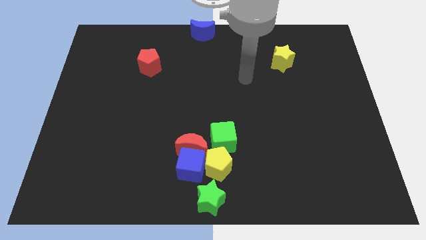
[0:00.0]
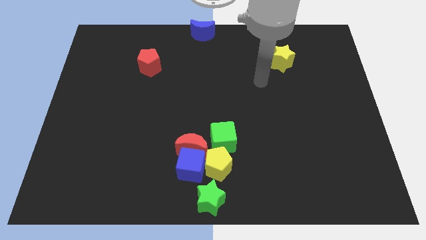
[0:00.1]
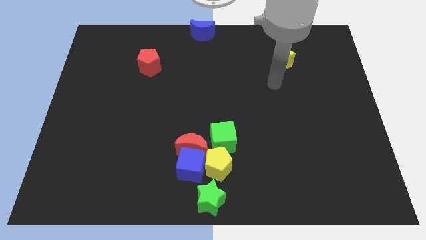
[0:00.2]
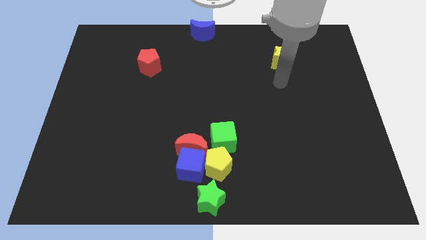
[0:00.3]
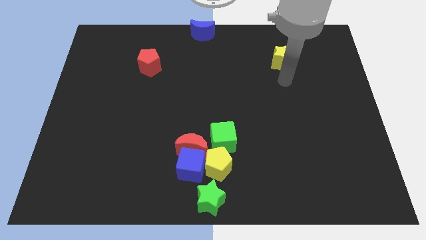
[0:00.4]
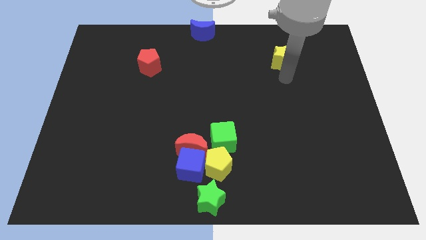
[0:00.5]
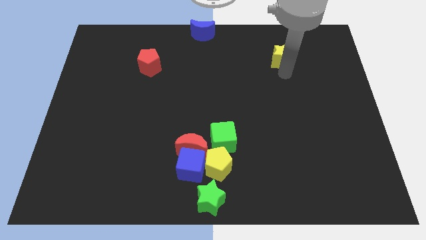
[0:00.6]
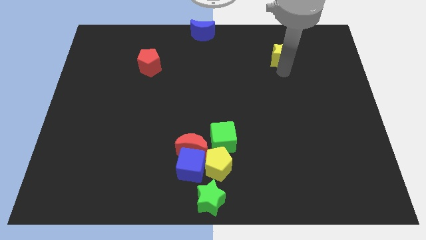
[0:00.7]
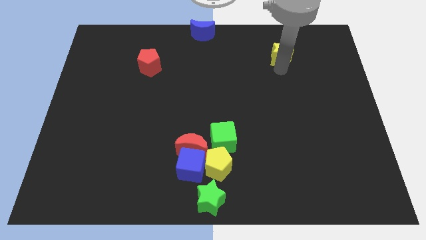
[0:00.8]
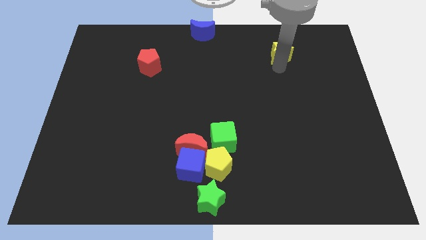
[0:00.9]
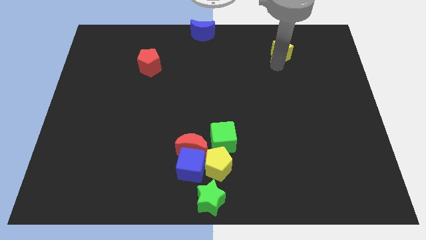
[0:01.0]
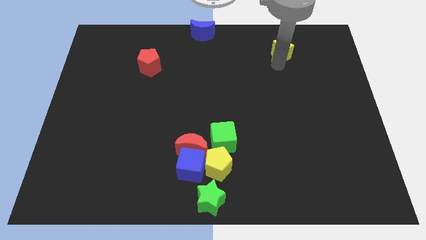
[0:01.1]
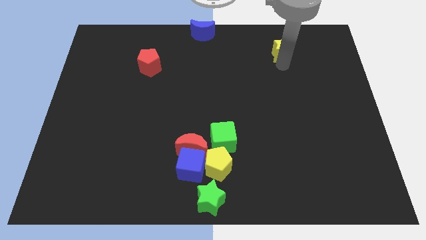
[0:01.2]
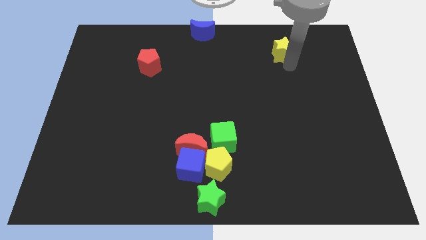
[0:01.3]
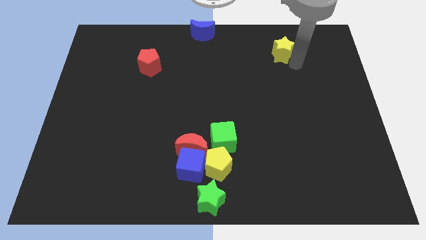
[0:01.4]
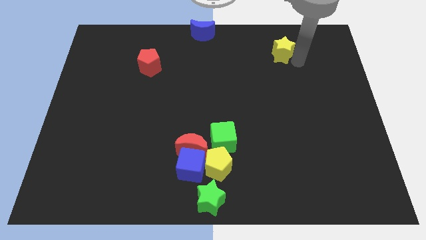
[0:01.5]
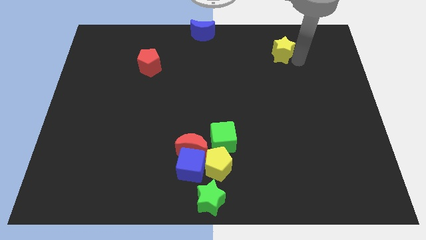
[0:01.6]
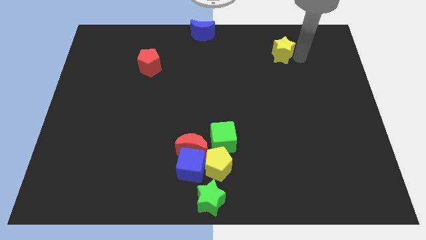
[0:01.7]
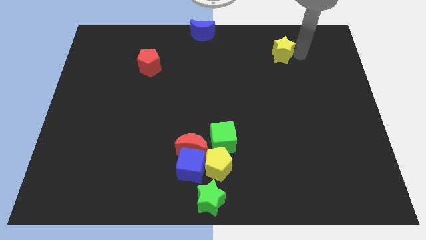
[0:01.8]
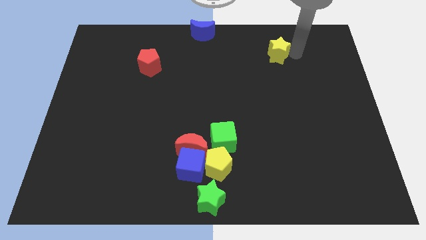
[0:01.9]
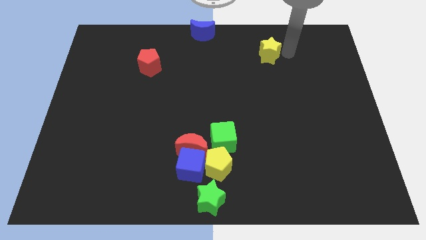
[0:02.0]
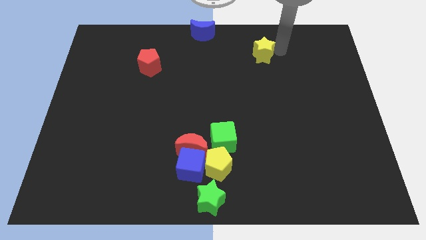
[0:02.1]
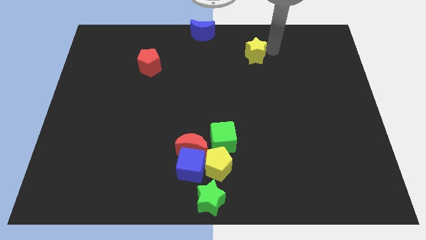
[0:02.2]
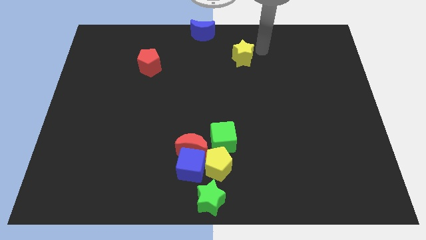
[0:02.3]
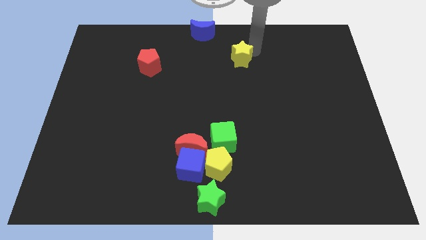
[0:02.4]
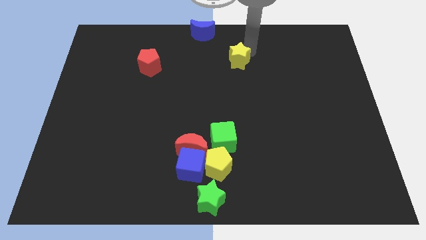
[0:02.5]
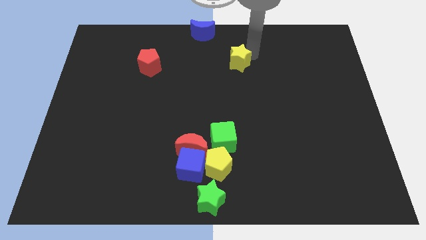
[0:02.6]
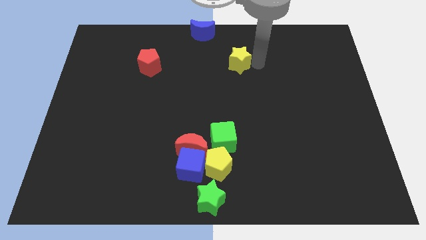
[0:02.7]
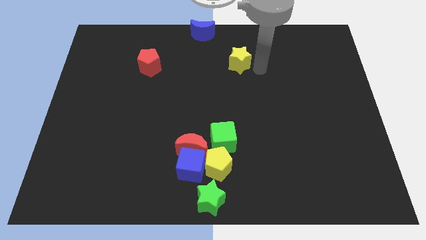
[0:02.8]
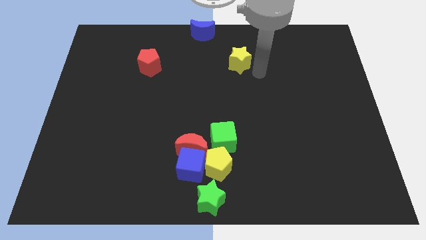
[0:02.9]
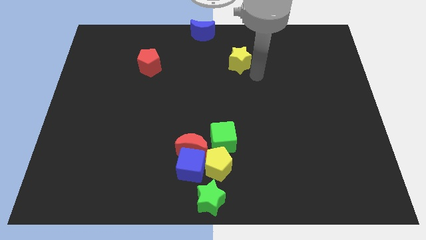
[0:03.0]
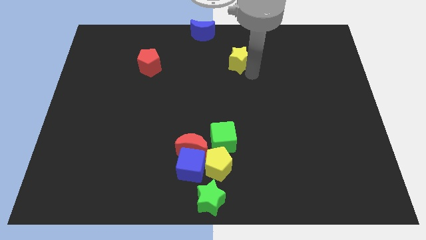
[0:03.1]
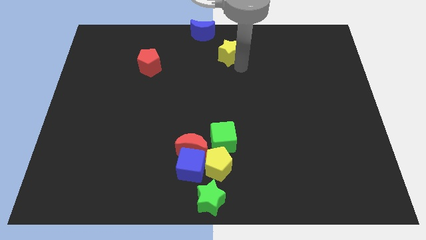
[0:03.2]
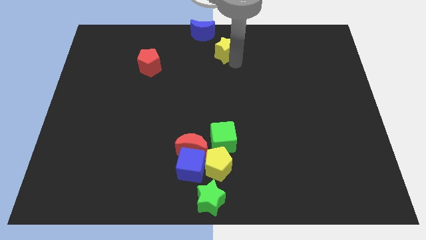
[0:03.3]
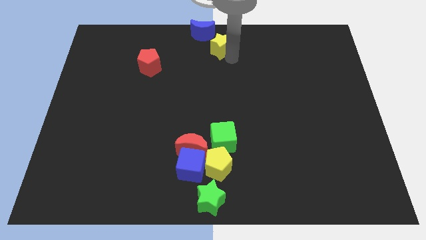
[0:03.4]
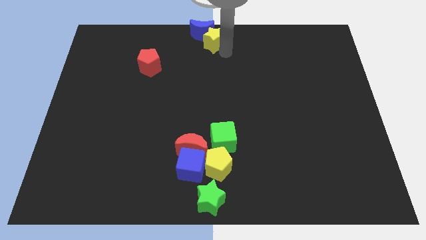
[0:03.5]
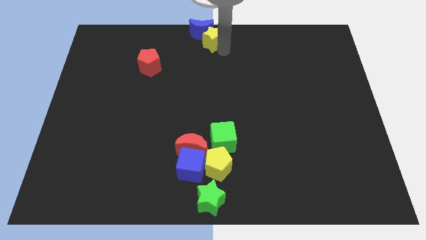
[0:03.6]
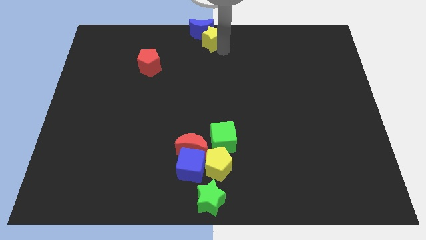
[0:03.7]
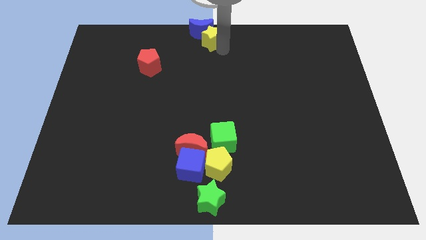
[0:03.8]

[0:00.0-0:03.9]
move the yellow star diagonally below the blue moon

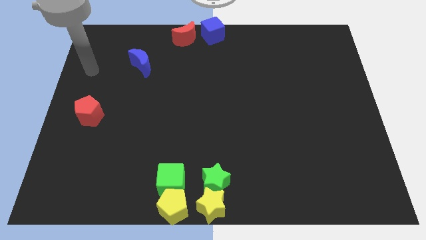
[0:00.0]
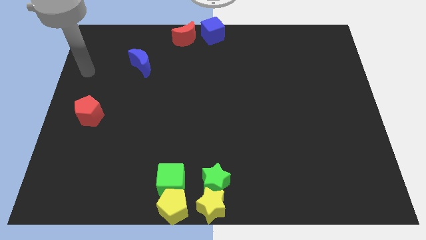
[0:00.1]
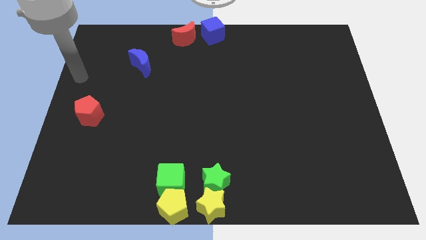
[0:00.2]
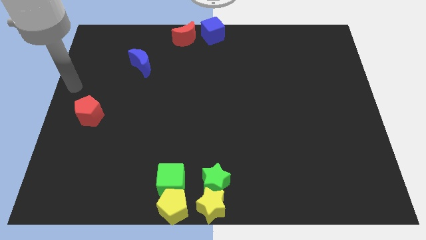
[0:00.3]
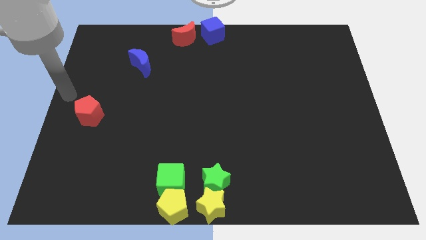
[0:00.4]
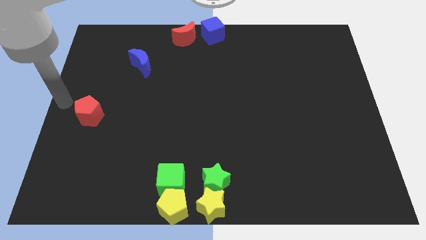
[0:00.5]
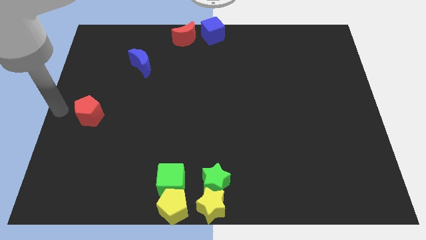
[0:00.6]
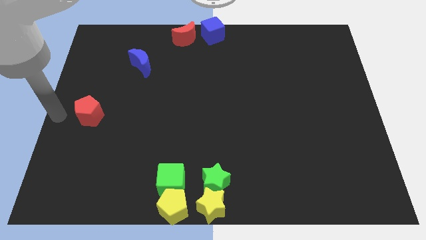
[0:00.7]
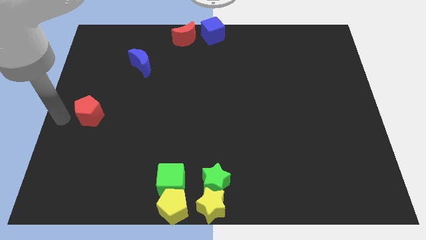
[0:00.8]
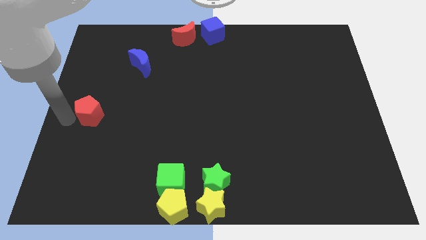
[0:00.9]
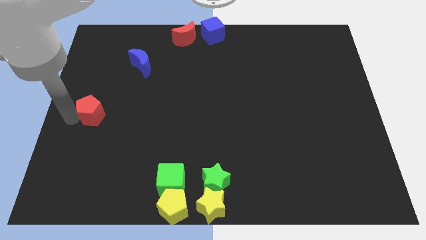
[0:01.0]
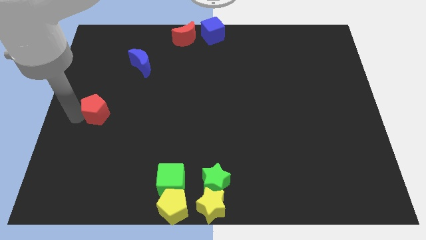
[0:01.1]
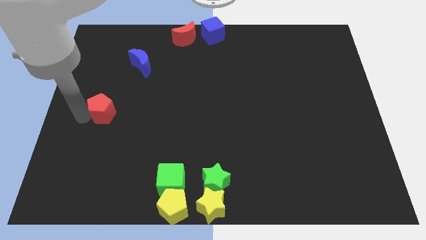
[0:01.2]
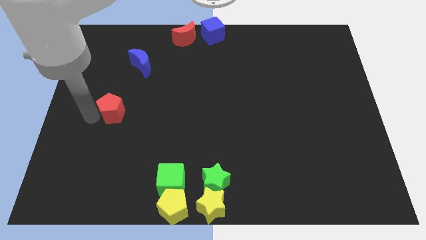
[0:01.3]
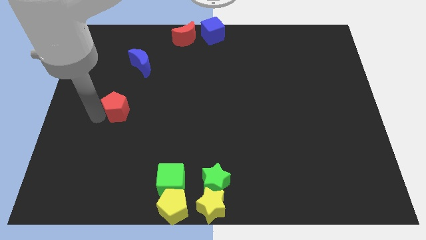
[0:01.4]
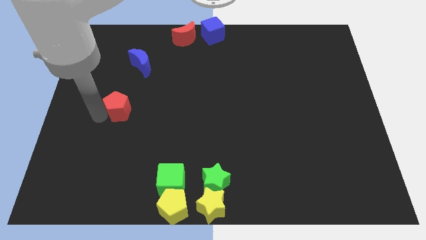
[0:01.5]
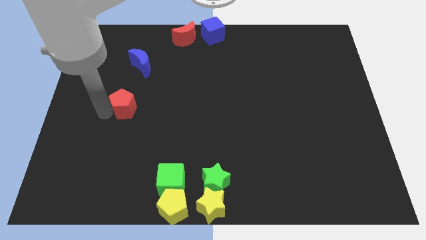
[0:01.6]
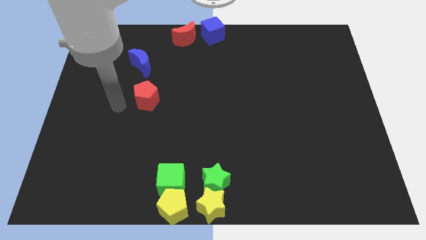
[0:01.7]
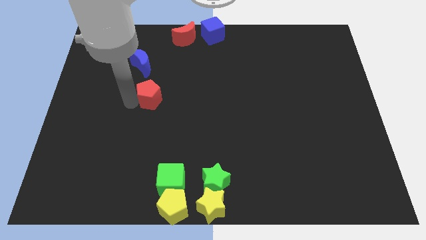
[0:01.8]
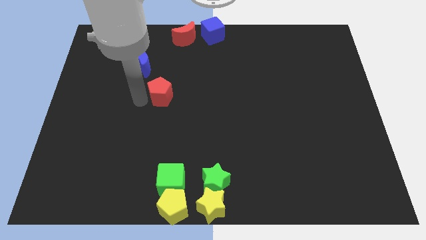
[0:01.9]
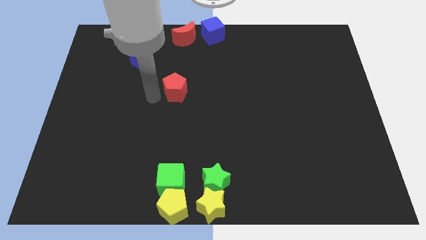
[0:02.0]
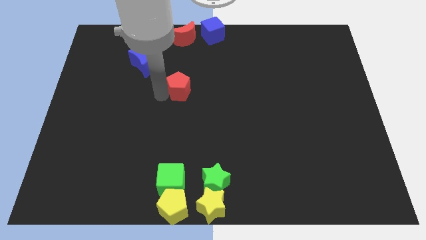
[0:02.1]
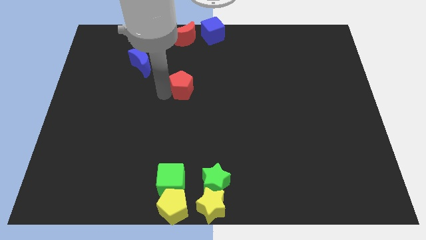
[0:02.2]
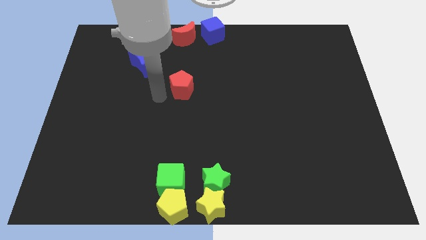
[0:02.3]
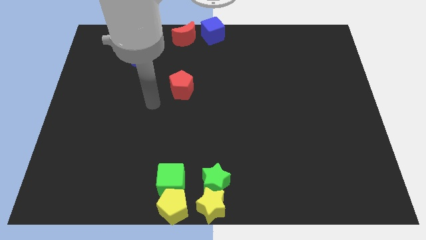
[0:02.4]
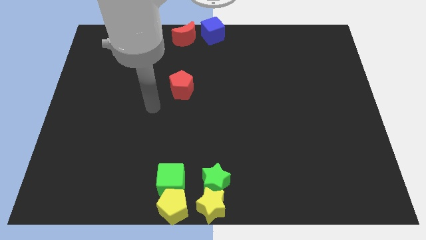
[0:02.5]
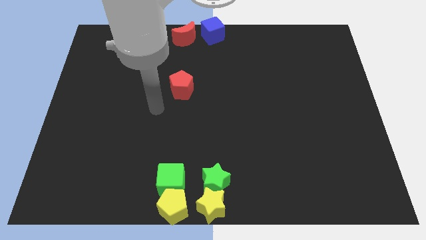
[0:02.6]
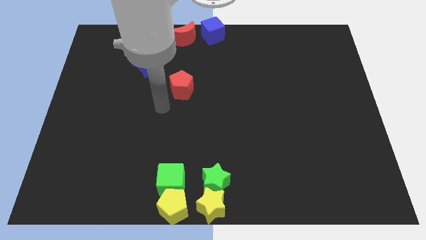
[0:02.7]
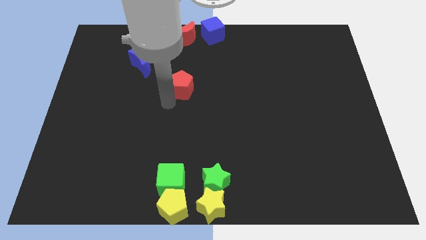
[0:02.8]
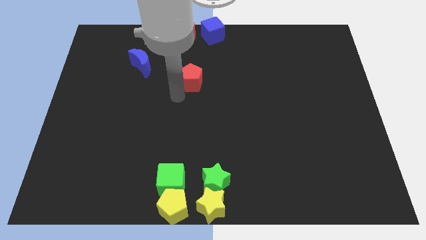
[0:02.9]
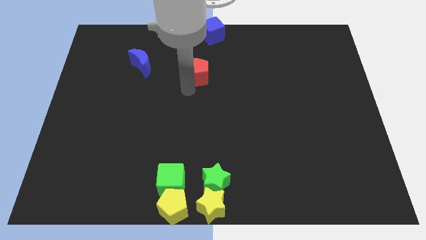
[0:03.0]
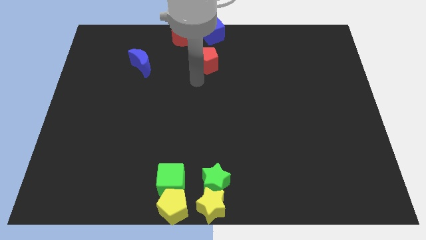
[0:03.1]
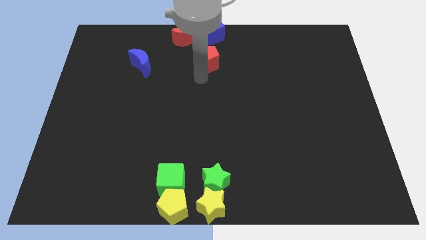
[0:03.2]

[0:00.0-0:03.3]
move red pentagon below the blue cube

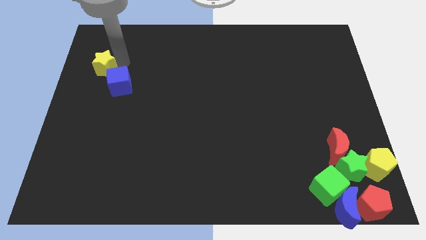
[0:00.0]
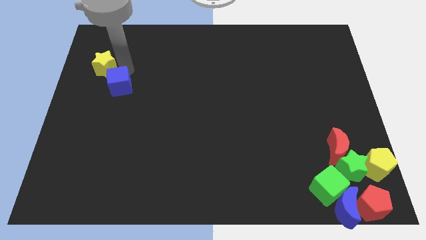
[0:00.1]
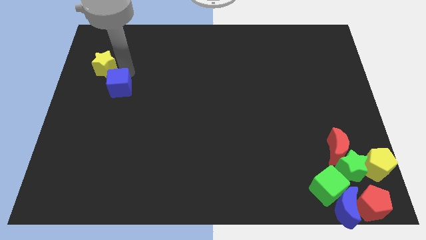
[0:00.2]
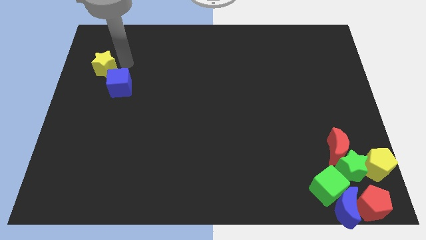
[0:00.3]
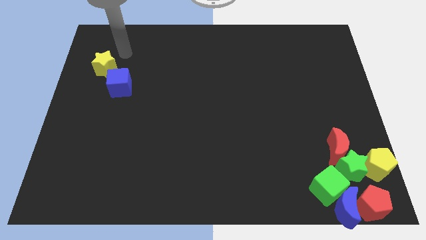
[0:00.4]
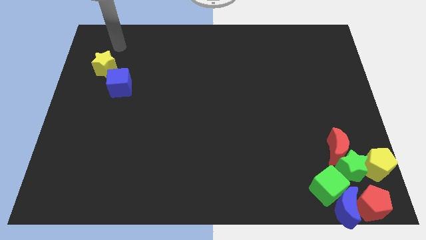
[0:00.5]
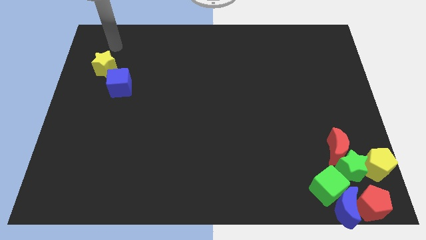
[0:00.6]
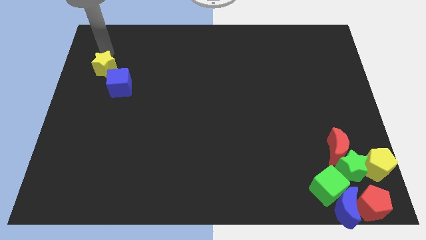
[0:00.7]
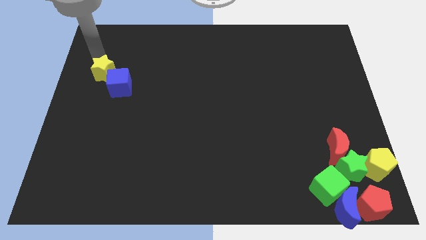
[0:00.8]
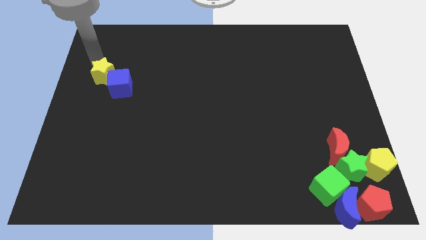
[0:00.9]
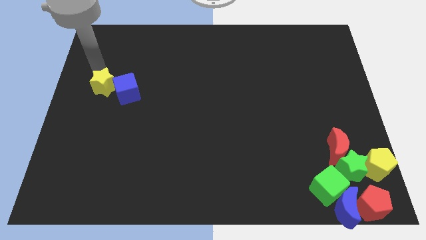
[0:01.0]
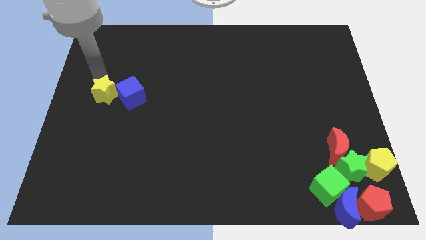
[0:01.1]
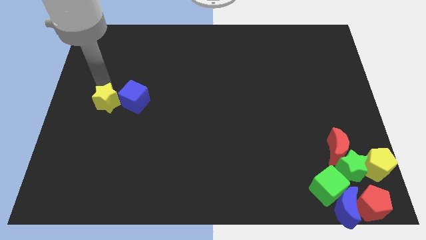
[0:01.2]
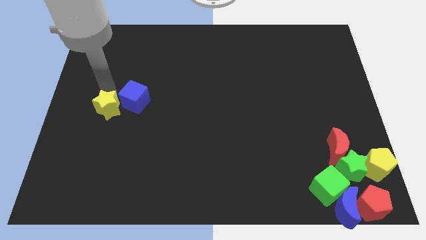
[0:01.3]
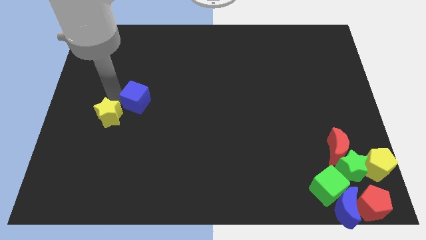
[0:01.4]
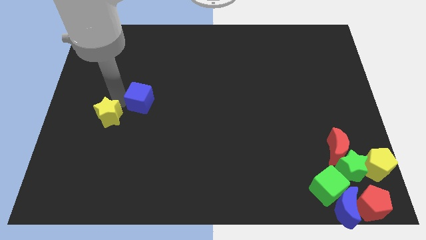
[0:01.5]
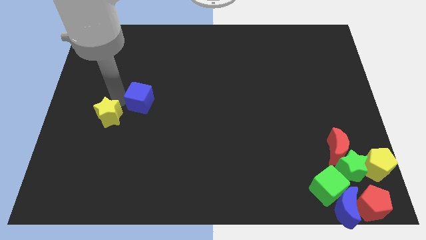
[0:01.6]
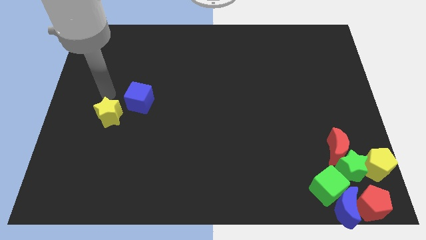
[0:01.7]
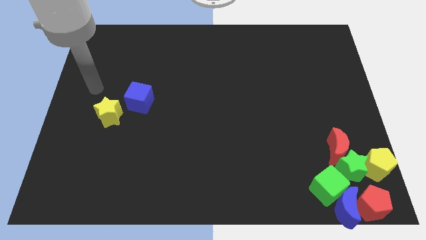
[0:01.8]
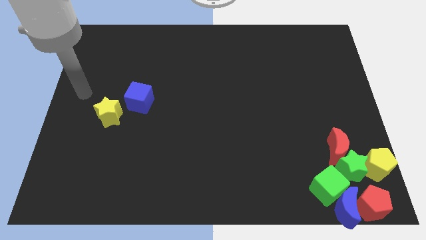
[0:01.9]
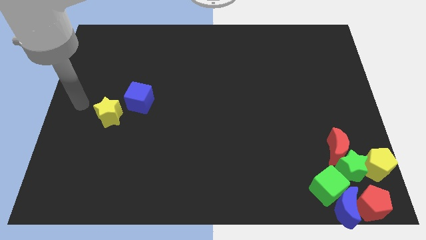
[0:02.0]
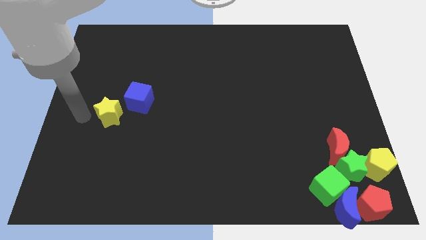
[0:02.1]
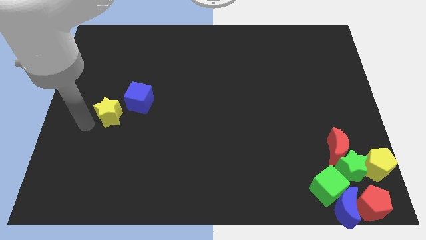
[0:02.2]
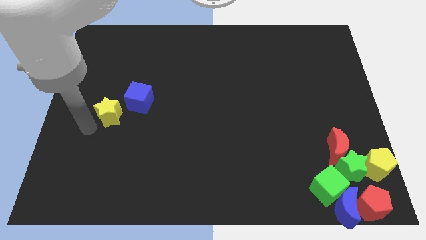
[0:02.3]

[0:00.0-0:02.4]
move the yellow star to the bottom left of the blue cube
